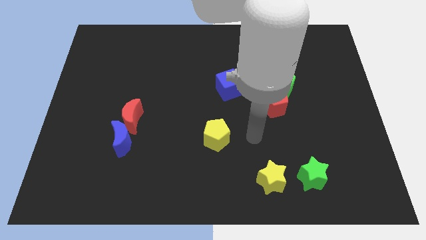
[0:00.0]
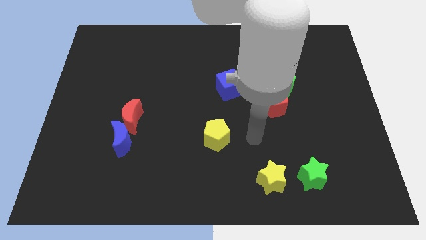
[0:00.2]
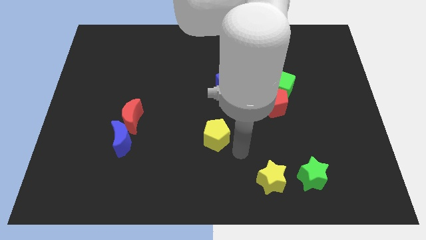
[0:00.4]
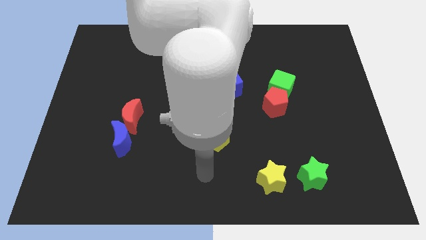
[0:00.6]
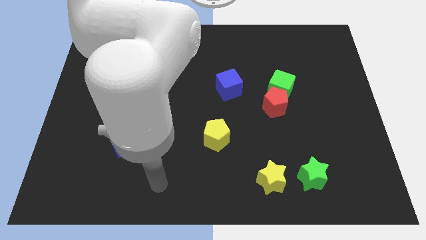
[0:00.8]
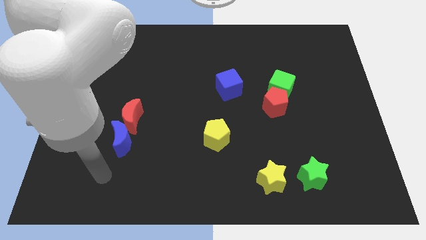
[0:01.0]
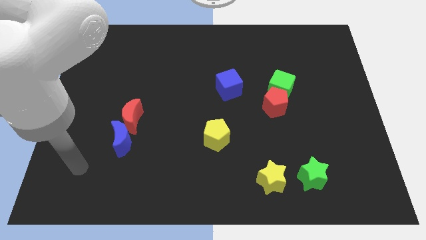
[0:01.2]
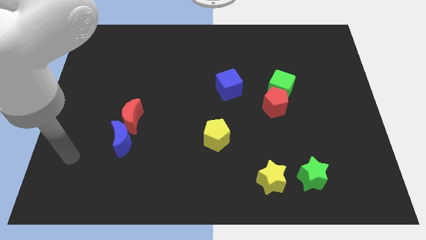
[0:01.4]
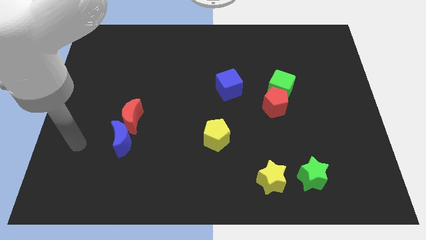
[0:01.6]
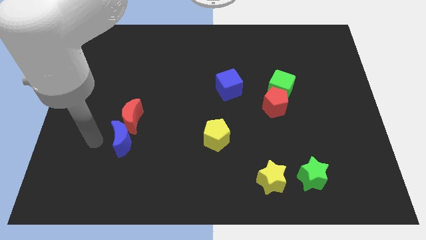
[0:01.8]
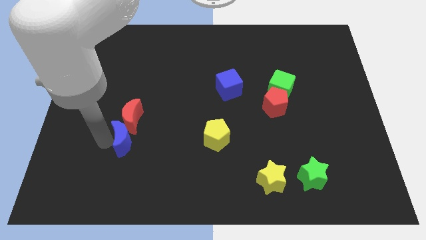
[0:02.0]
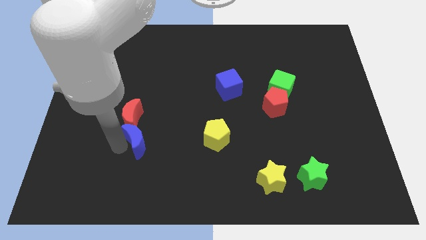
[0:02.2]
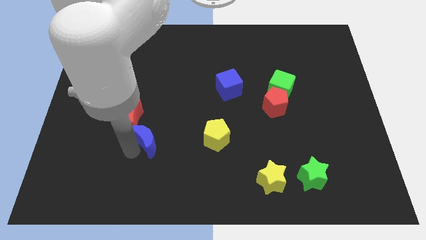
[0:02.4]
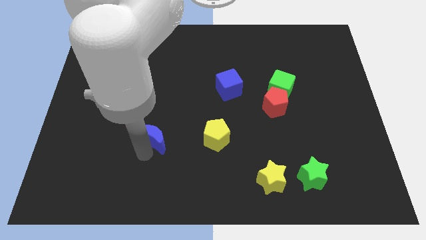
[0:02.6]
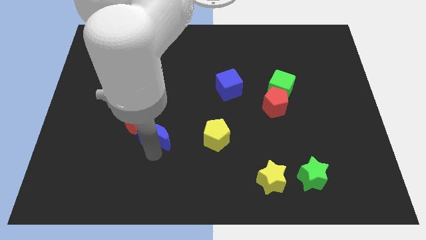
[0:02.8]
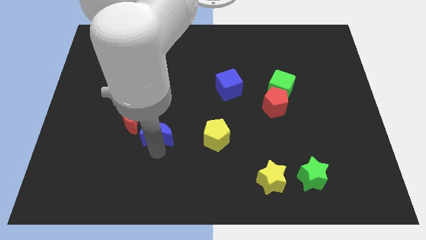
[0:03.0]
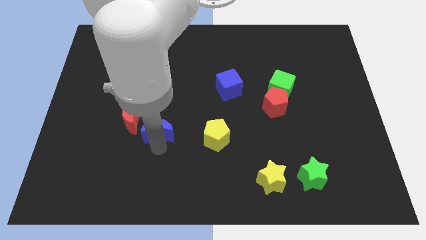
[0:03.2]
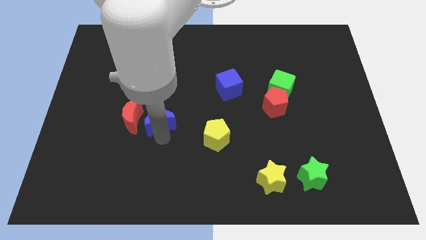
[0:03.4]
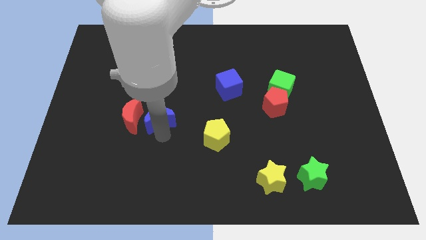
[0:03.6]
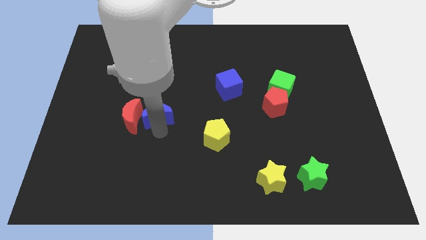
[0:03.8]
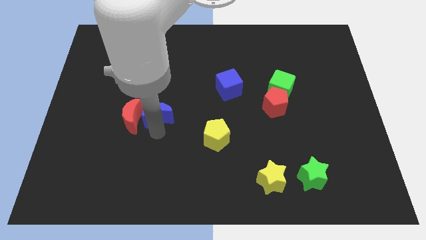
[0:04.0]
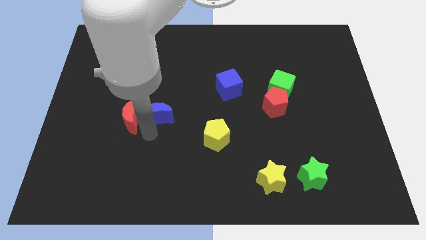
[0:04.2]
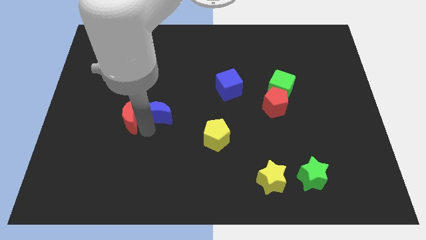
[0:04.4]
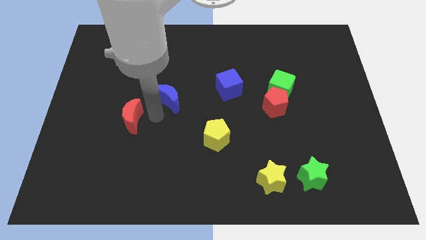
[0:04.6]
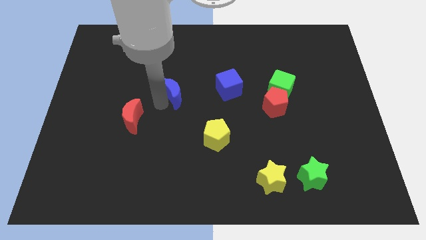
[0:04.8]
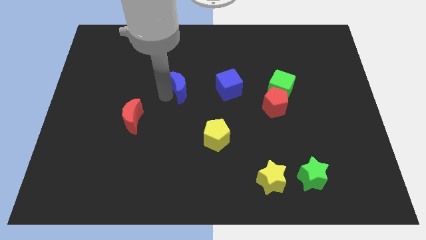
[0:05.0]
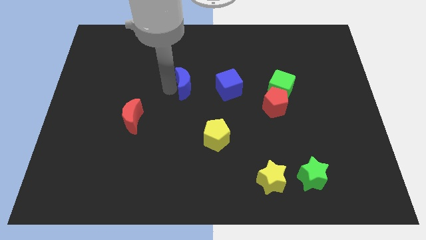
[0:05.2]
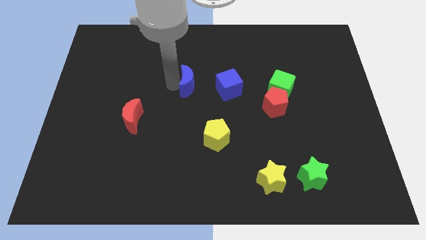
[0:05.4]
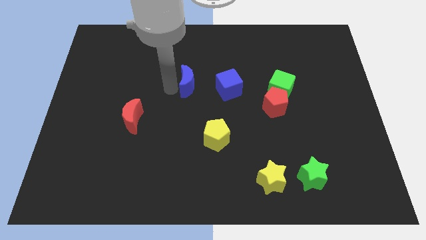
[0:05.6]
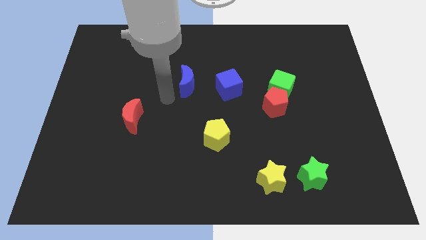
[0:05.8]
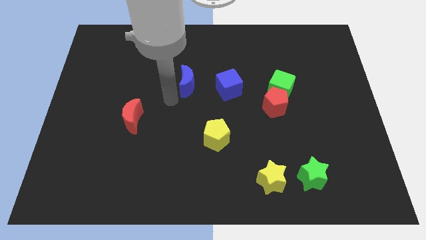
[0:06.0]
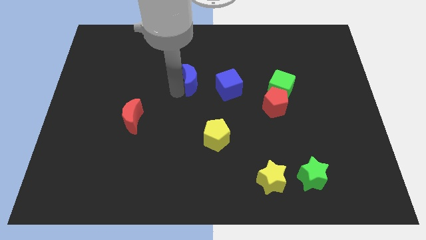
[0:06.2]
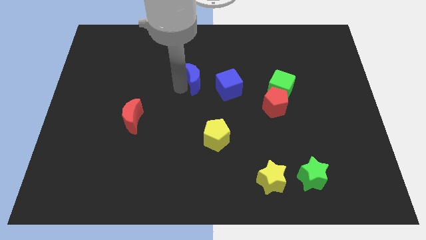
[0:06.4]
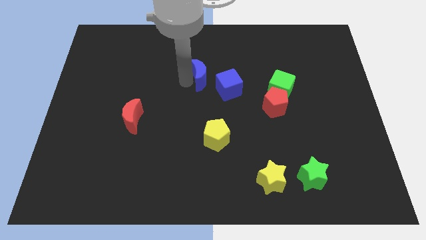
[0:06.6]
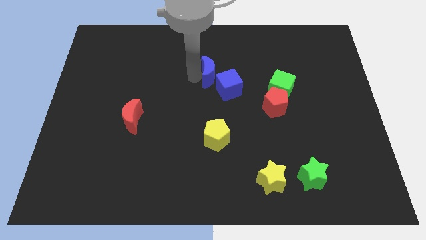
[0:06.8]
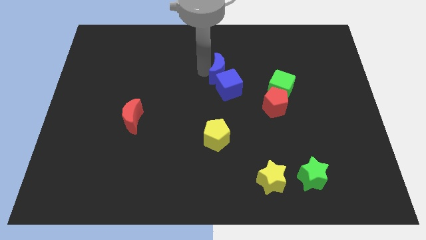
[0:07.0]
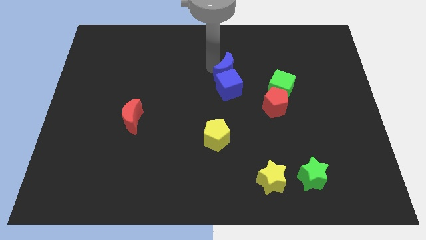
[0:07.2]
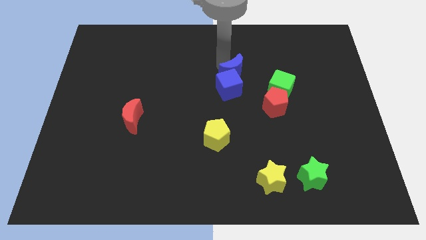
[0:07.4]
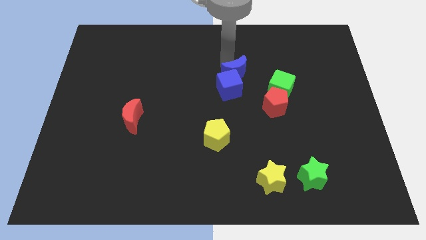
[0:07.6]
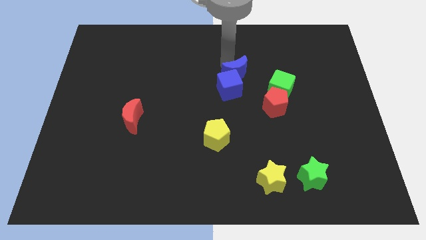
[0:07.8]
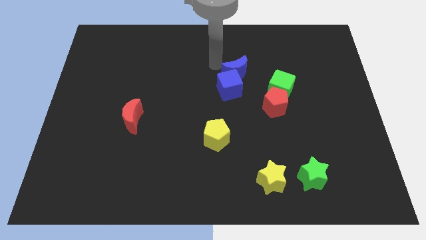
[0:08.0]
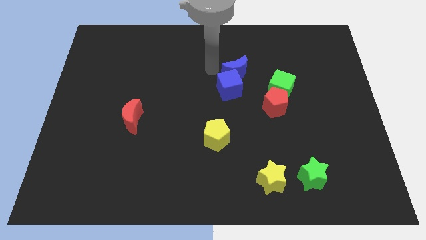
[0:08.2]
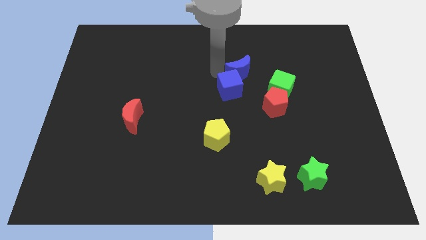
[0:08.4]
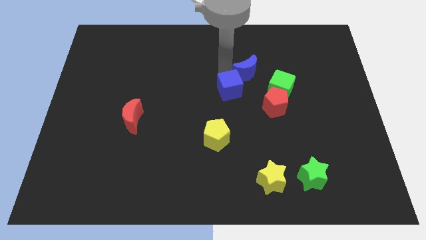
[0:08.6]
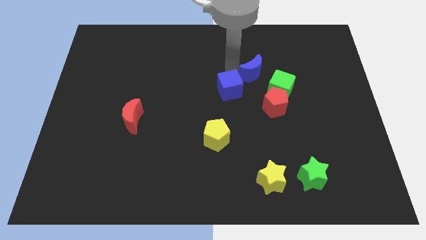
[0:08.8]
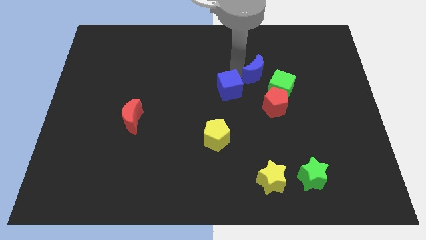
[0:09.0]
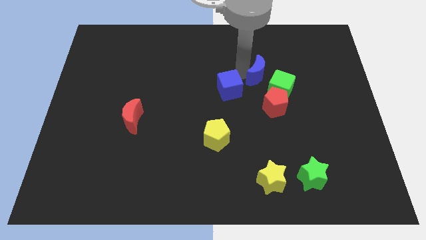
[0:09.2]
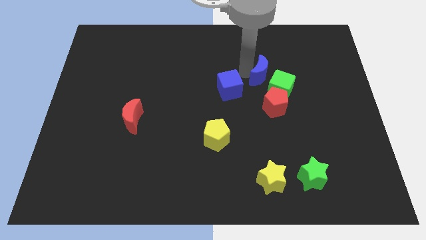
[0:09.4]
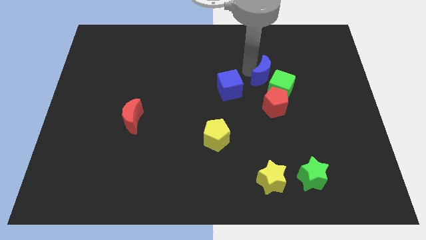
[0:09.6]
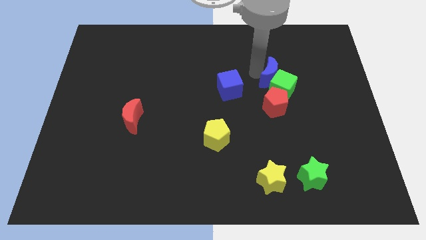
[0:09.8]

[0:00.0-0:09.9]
put the blue moon next to the green cube

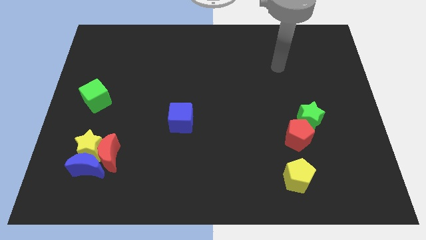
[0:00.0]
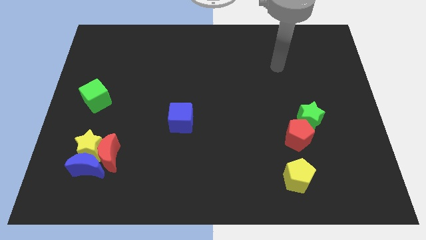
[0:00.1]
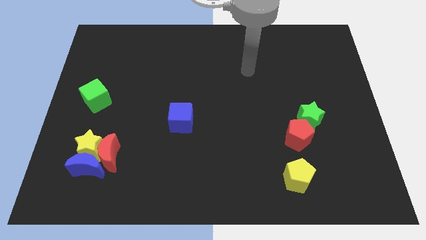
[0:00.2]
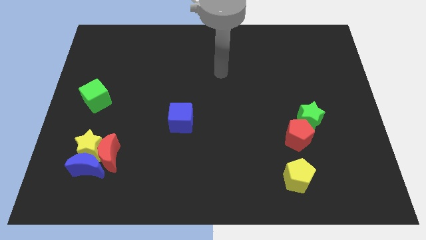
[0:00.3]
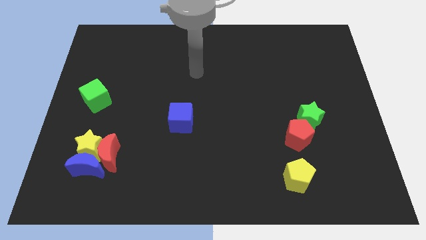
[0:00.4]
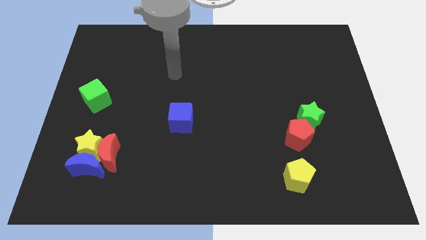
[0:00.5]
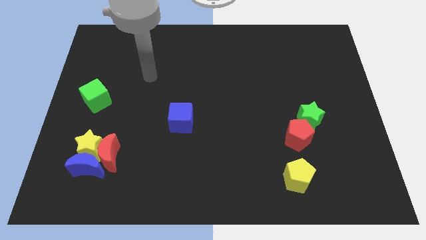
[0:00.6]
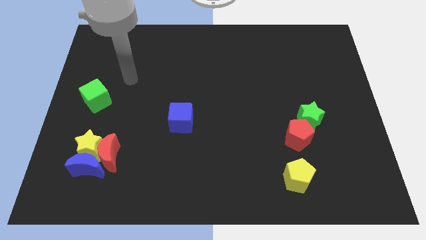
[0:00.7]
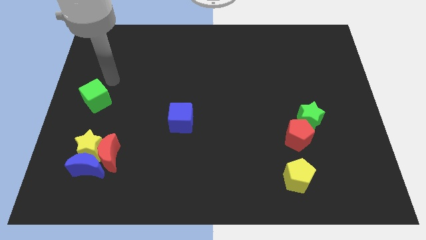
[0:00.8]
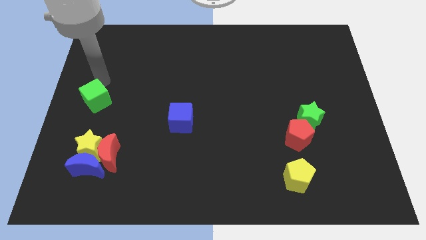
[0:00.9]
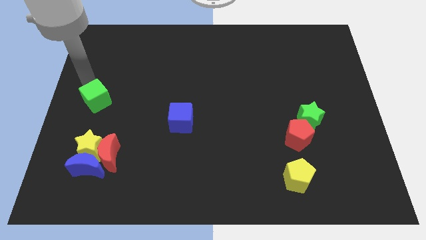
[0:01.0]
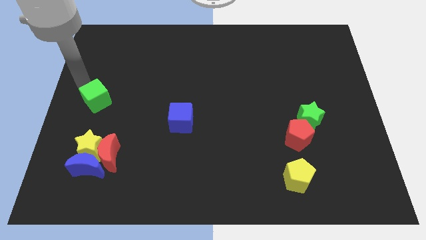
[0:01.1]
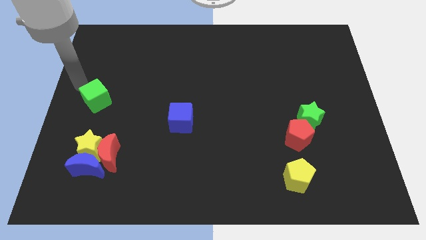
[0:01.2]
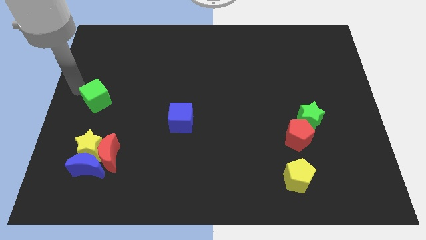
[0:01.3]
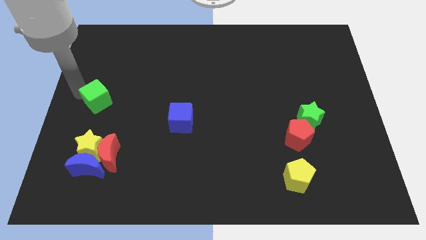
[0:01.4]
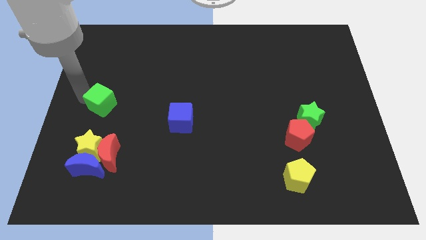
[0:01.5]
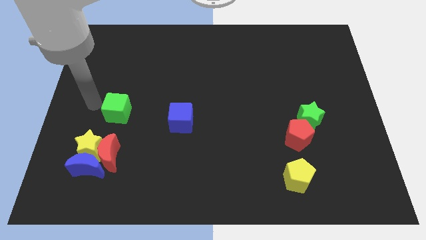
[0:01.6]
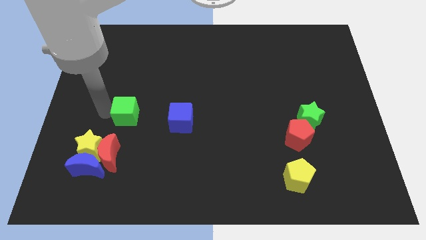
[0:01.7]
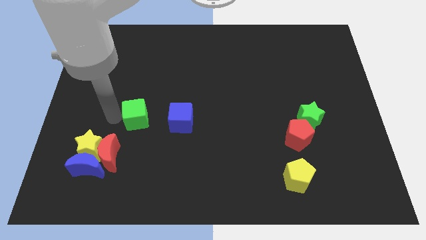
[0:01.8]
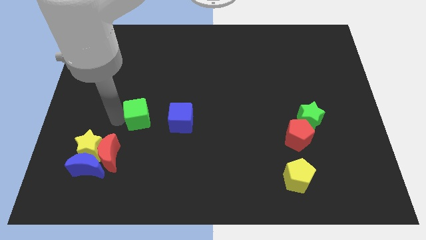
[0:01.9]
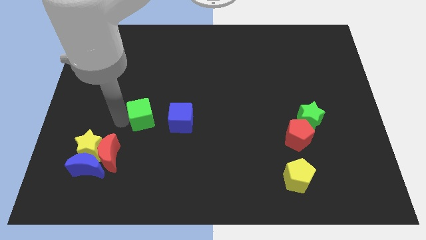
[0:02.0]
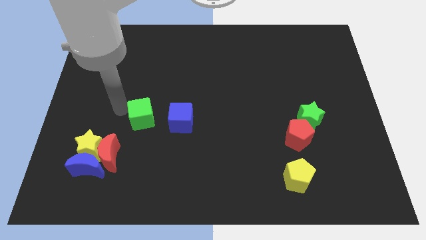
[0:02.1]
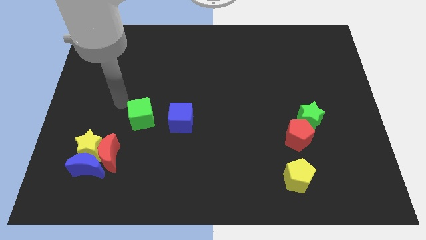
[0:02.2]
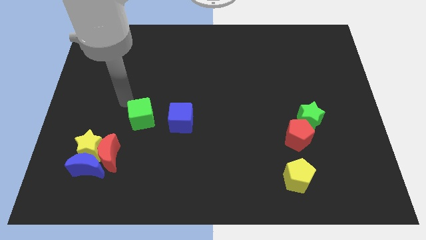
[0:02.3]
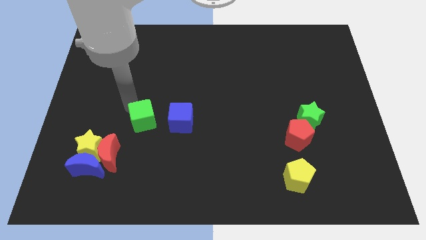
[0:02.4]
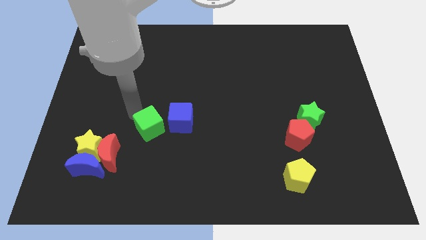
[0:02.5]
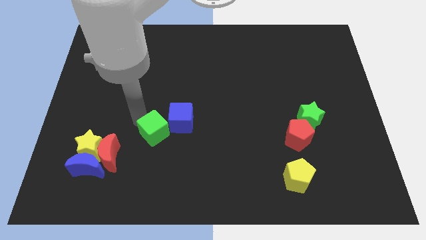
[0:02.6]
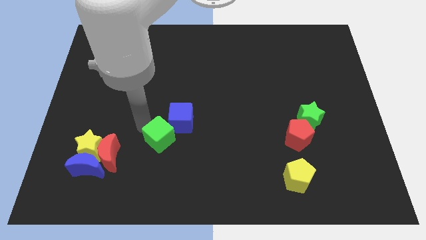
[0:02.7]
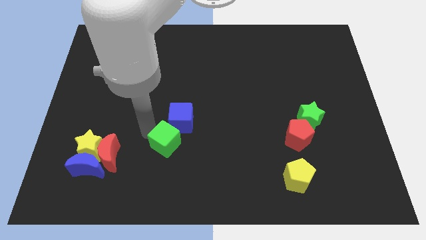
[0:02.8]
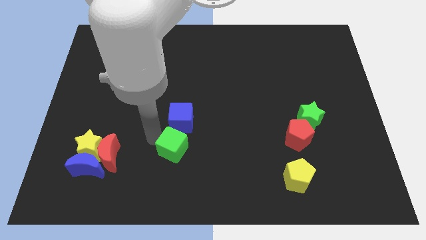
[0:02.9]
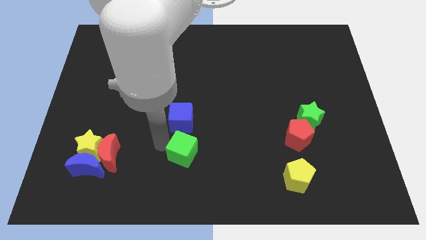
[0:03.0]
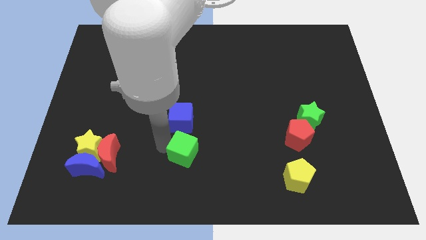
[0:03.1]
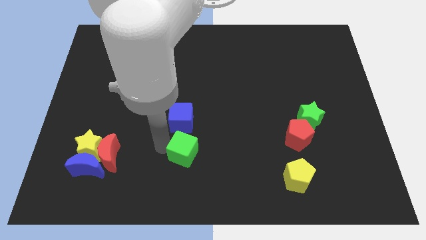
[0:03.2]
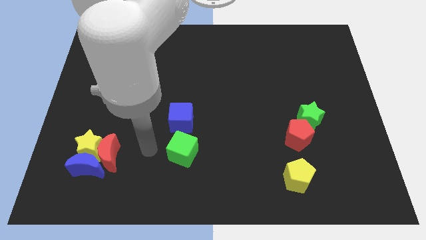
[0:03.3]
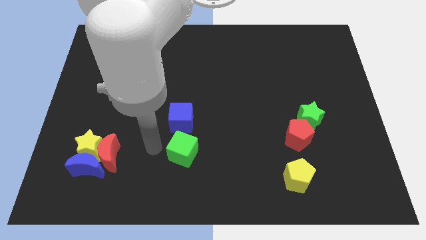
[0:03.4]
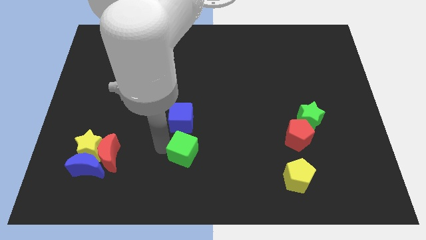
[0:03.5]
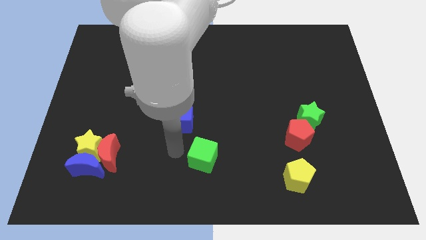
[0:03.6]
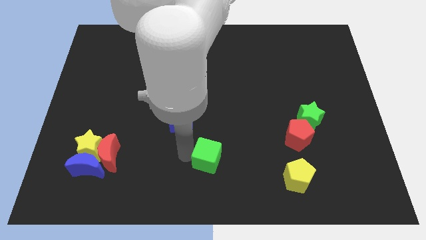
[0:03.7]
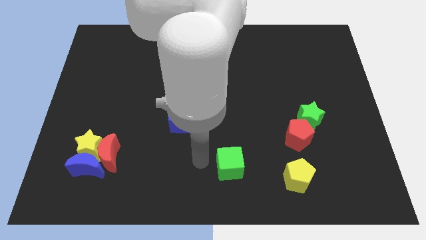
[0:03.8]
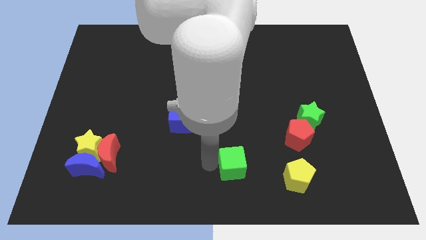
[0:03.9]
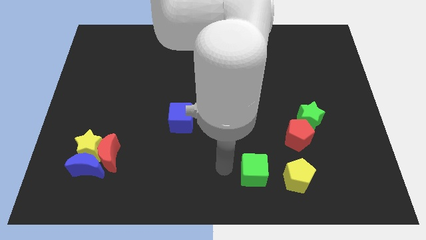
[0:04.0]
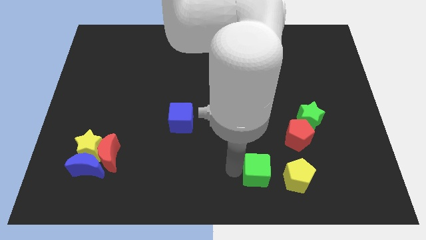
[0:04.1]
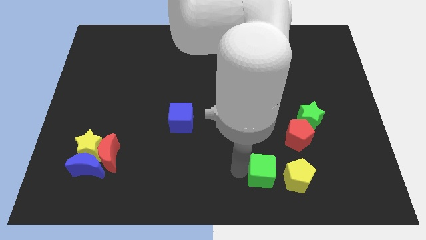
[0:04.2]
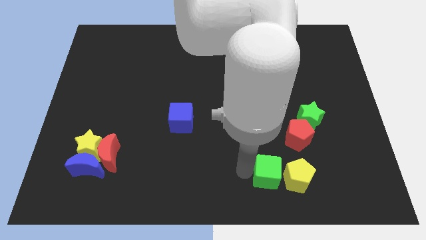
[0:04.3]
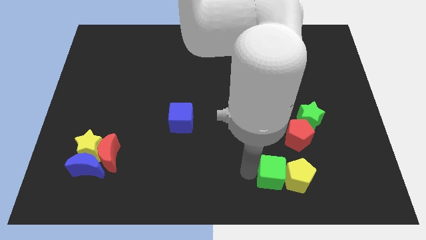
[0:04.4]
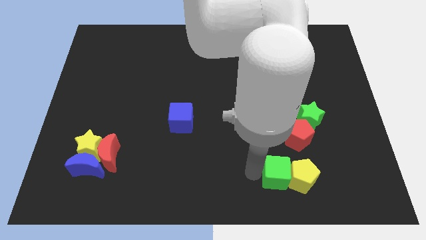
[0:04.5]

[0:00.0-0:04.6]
put the green cube close to the yellow pentagon
